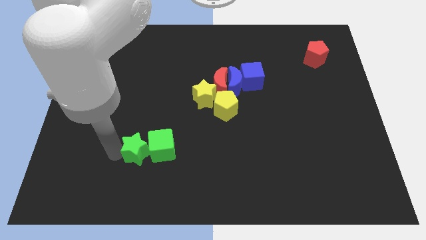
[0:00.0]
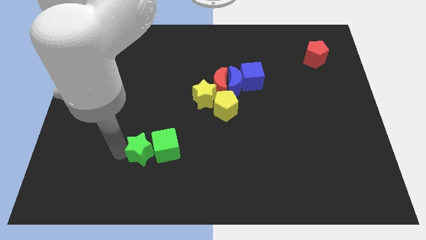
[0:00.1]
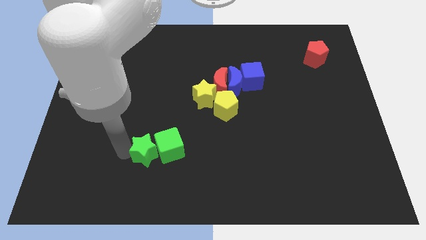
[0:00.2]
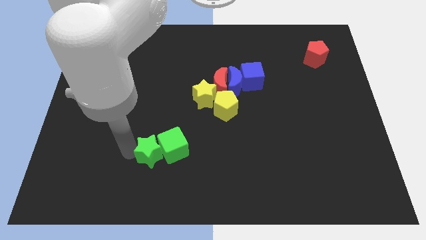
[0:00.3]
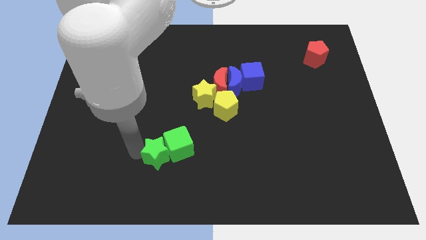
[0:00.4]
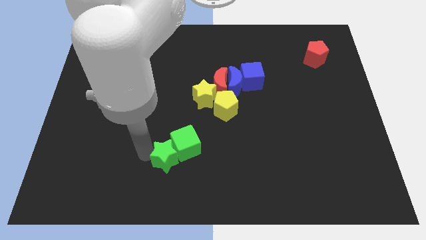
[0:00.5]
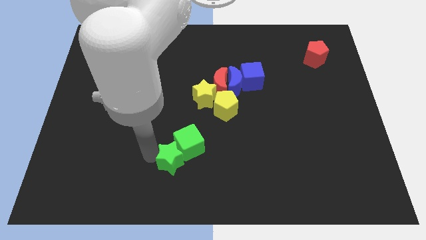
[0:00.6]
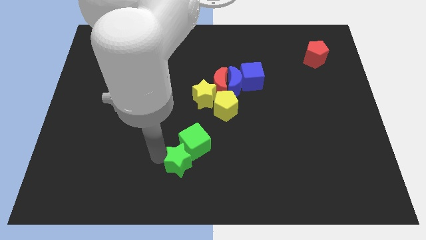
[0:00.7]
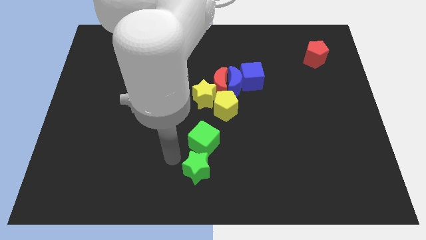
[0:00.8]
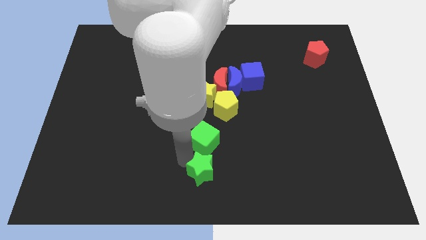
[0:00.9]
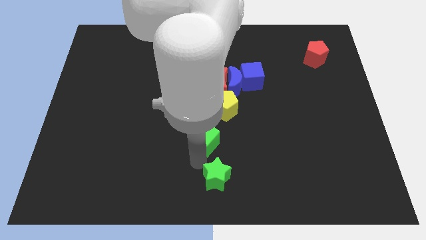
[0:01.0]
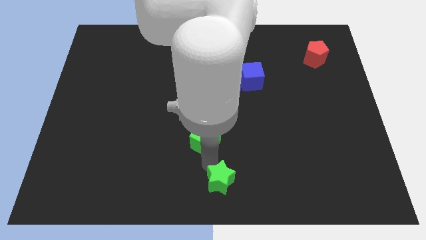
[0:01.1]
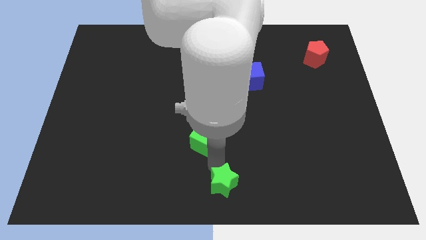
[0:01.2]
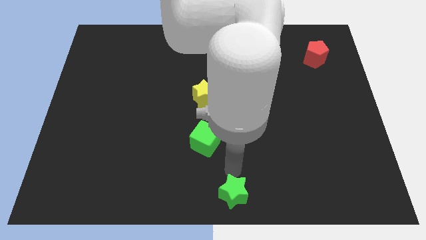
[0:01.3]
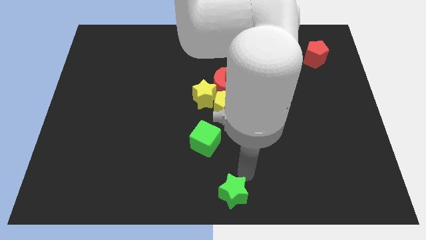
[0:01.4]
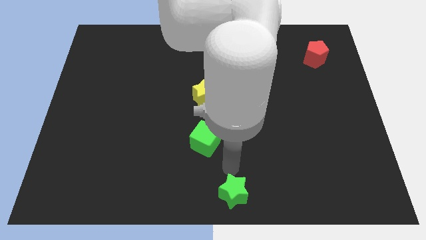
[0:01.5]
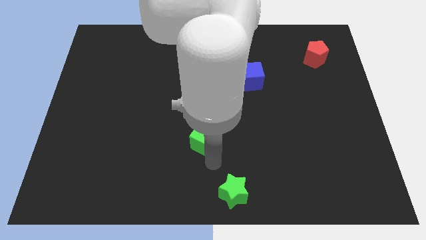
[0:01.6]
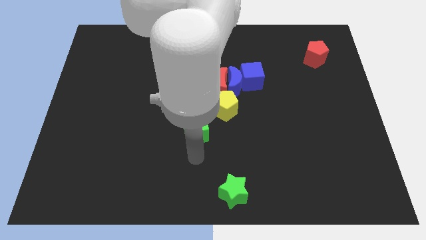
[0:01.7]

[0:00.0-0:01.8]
push the green star to the bottom center

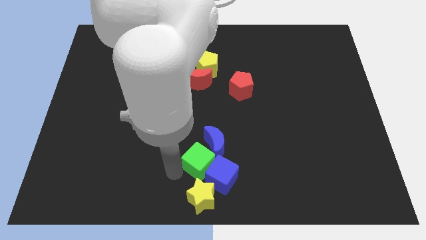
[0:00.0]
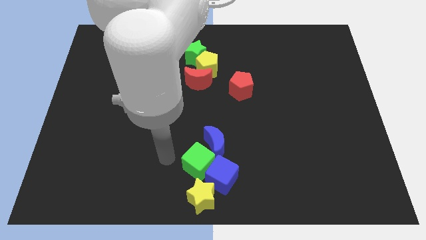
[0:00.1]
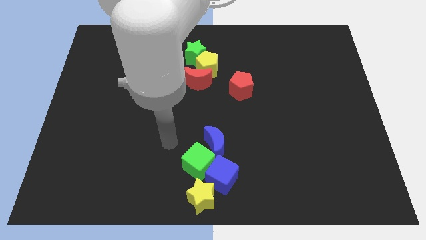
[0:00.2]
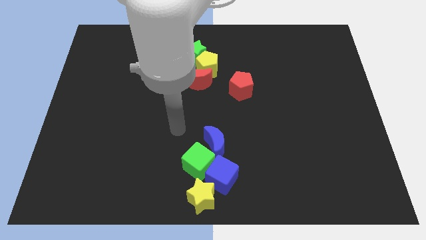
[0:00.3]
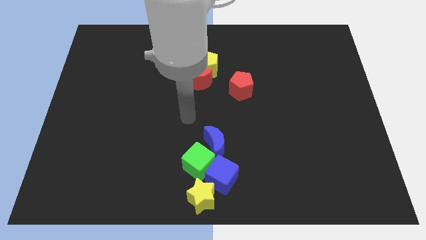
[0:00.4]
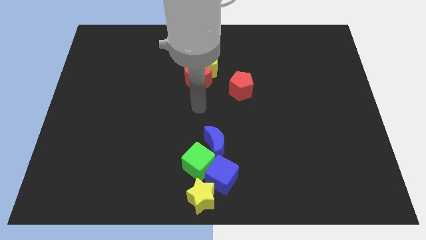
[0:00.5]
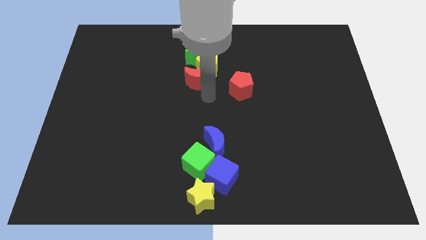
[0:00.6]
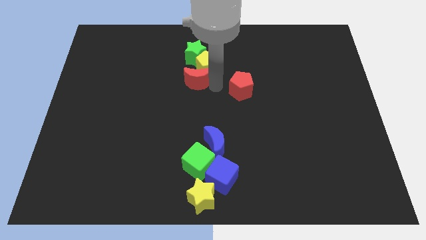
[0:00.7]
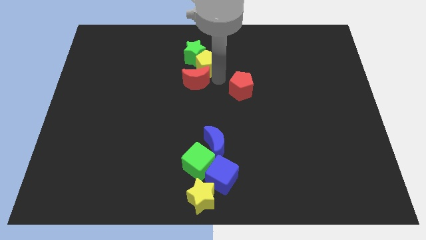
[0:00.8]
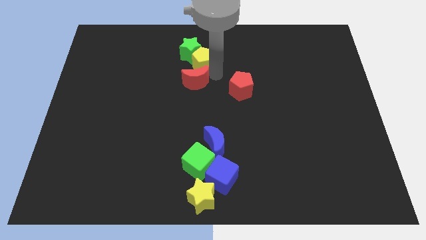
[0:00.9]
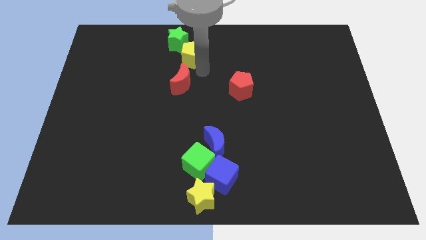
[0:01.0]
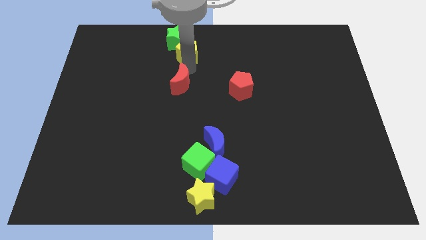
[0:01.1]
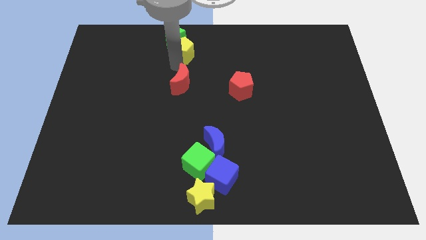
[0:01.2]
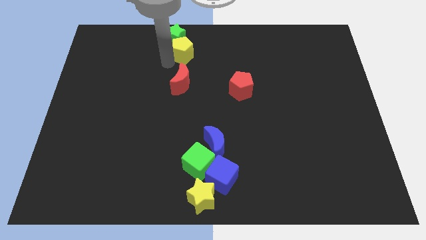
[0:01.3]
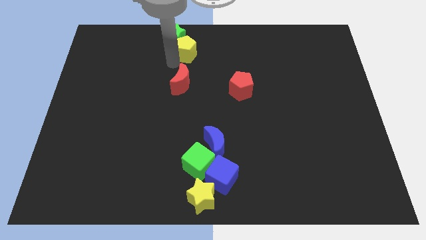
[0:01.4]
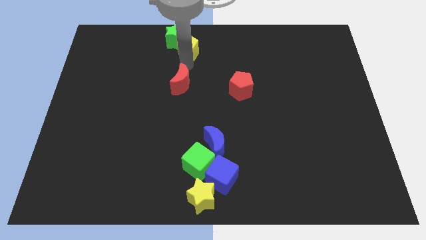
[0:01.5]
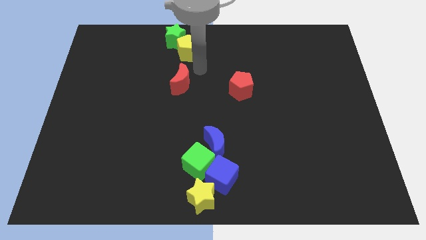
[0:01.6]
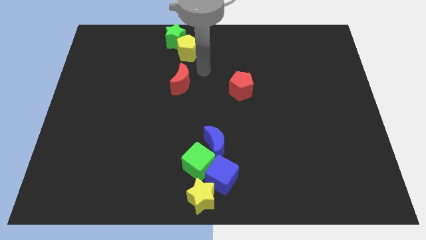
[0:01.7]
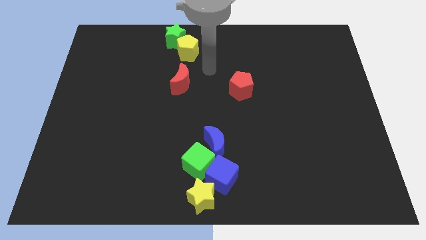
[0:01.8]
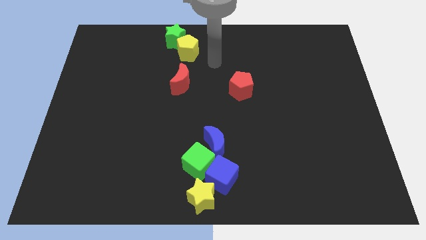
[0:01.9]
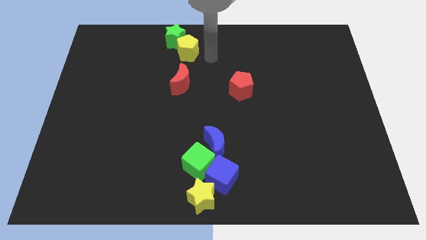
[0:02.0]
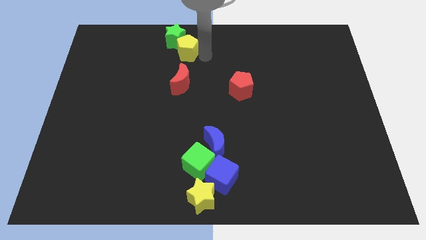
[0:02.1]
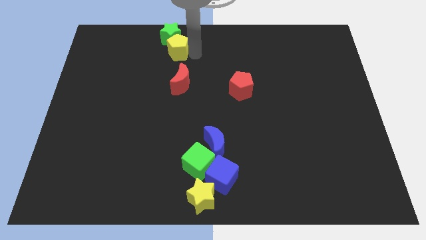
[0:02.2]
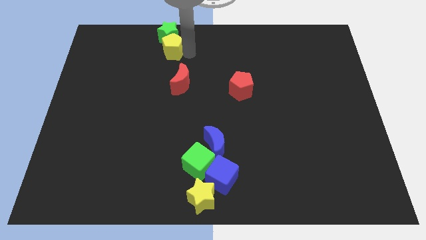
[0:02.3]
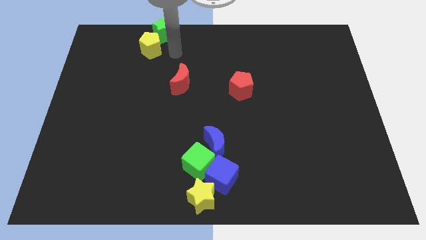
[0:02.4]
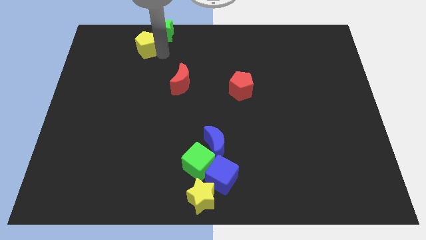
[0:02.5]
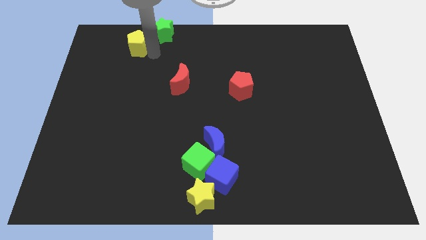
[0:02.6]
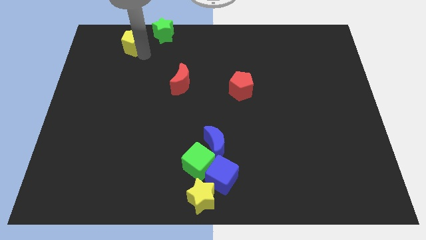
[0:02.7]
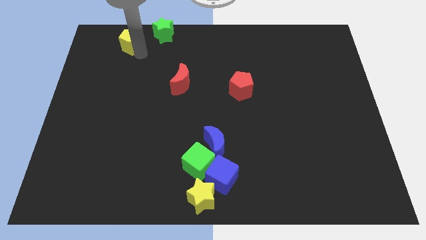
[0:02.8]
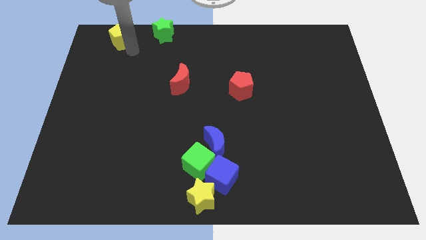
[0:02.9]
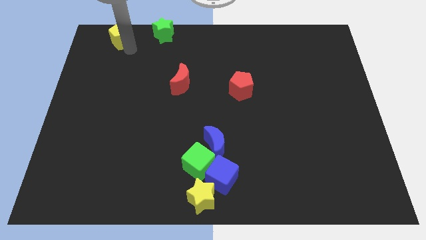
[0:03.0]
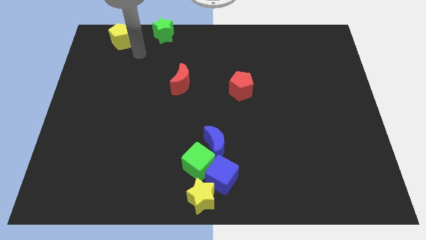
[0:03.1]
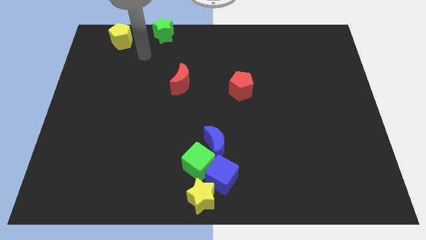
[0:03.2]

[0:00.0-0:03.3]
push the yellow pentagon to the left of the green star

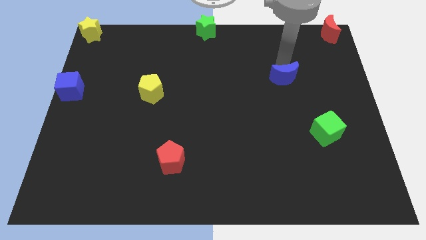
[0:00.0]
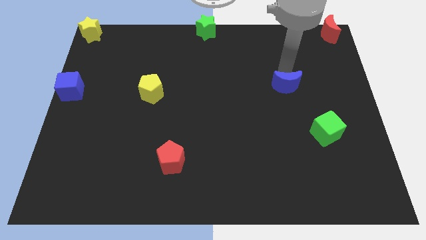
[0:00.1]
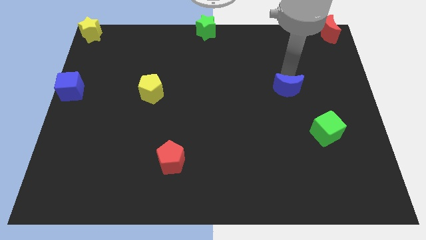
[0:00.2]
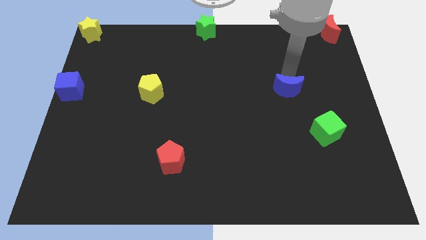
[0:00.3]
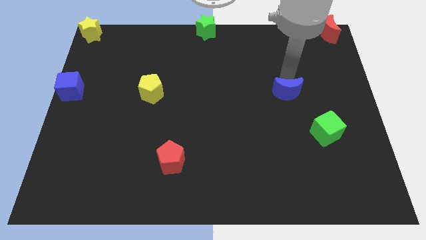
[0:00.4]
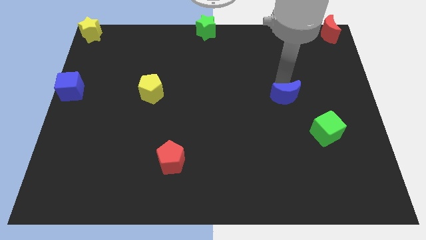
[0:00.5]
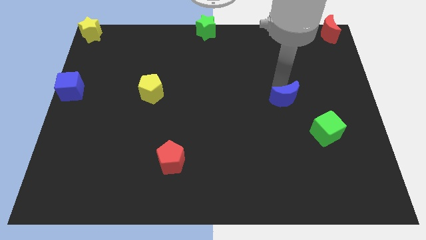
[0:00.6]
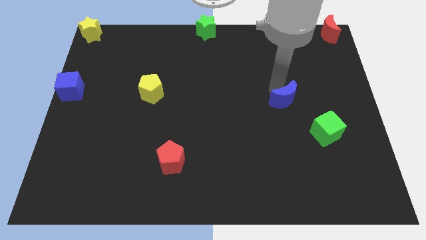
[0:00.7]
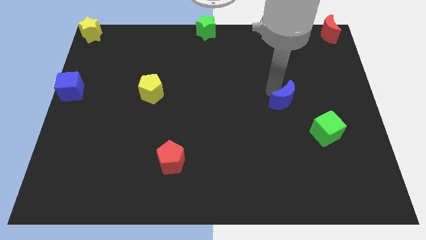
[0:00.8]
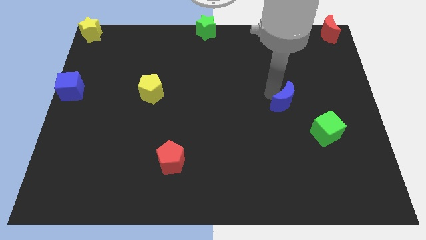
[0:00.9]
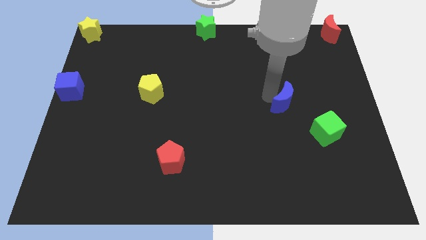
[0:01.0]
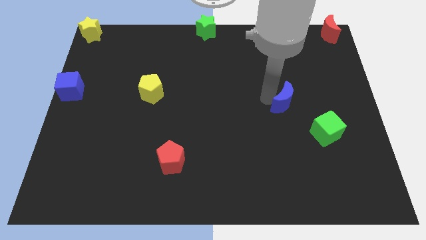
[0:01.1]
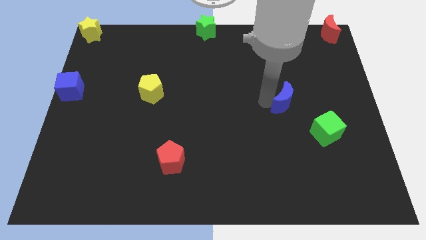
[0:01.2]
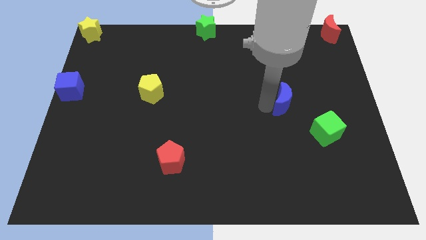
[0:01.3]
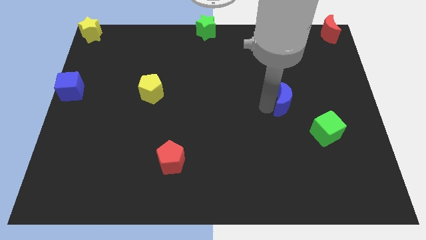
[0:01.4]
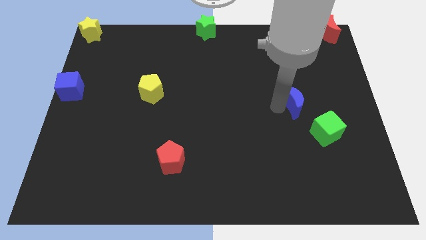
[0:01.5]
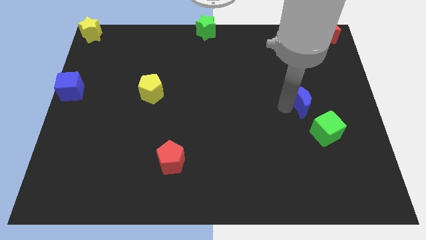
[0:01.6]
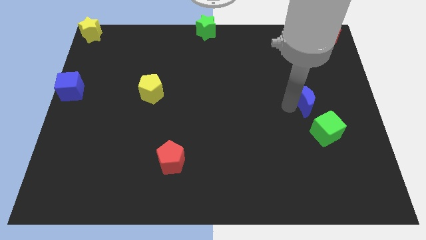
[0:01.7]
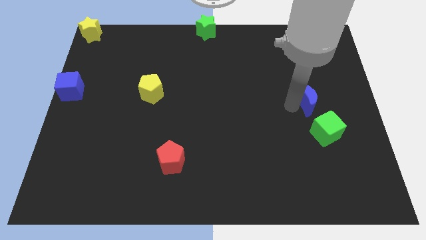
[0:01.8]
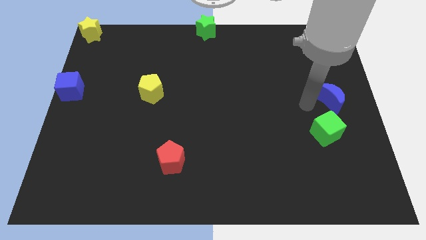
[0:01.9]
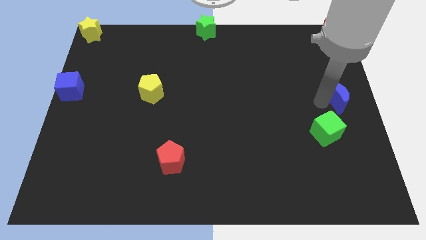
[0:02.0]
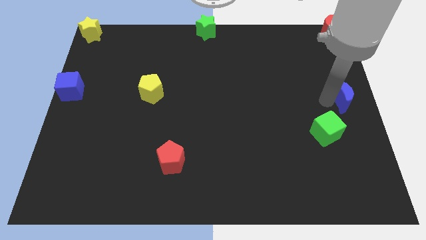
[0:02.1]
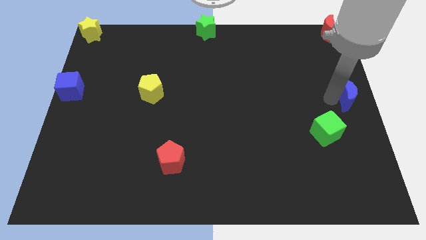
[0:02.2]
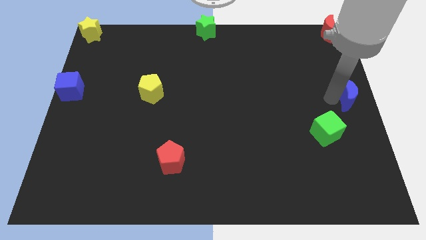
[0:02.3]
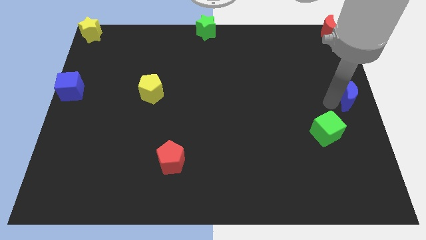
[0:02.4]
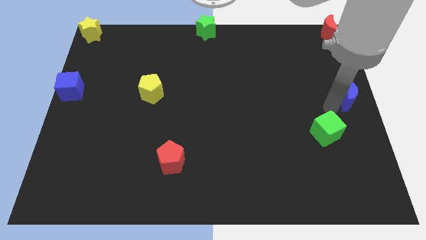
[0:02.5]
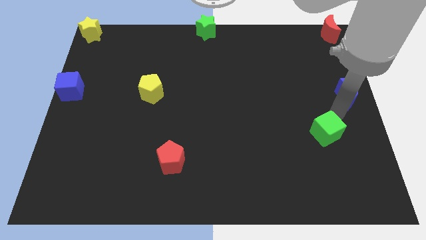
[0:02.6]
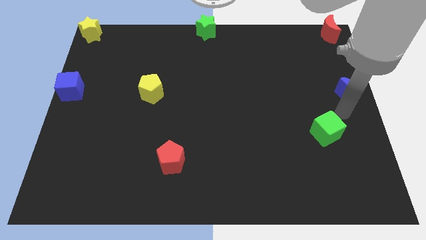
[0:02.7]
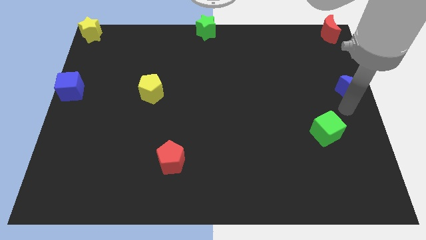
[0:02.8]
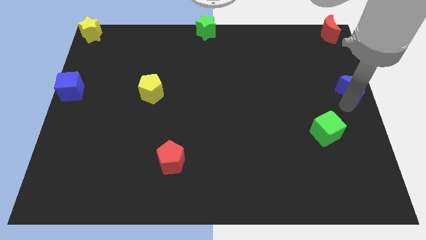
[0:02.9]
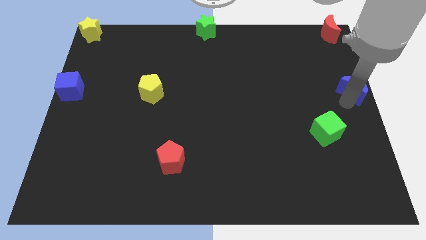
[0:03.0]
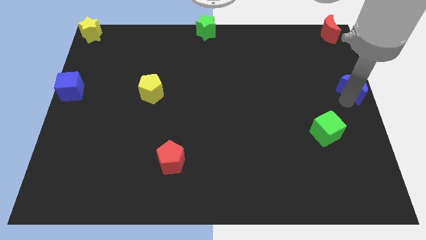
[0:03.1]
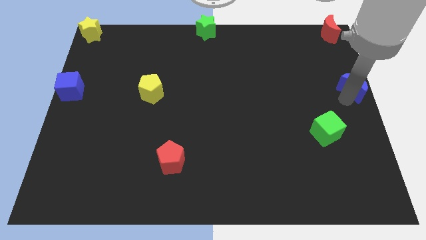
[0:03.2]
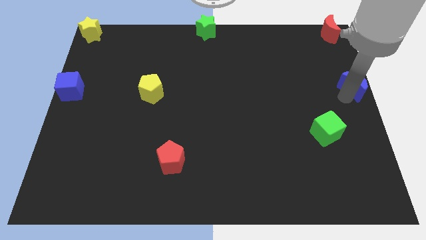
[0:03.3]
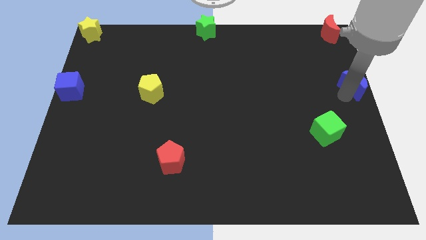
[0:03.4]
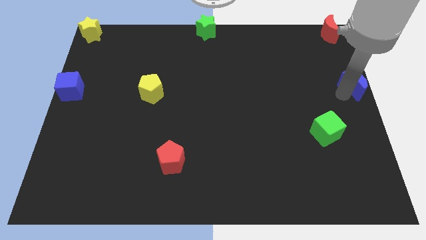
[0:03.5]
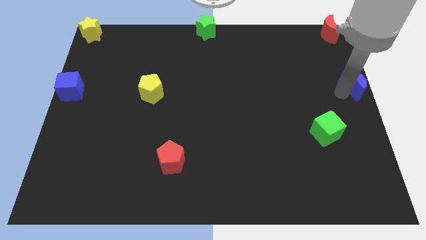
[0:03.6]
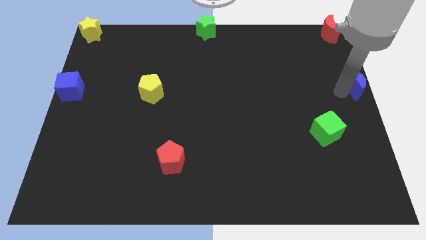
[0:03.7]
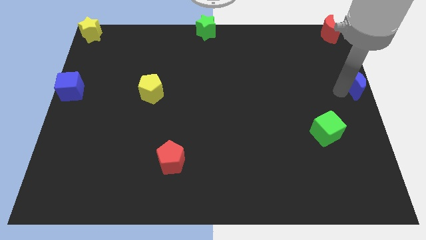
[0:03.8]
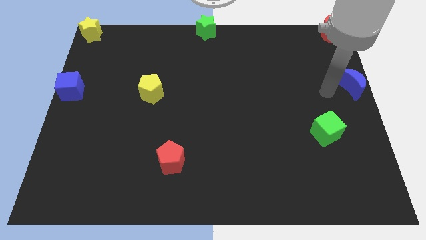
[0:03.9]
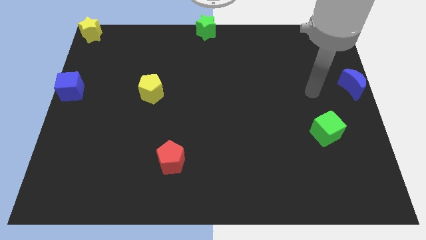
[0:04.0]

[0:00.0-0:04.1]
slide blue moon towards center right
